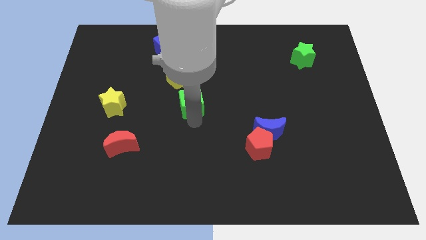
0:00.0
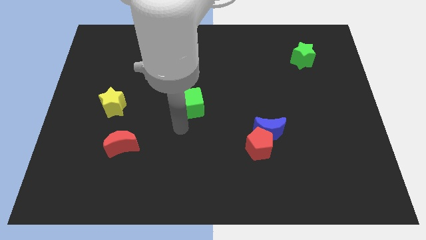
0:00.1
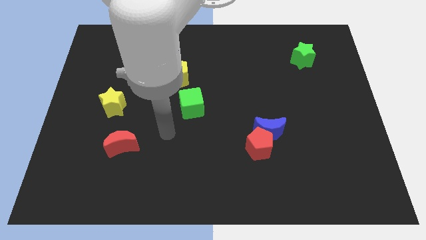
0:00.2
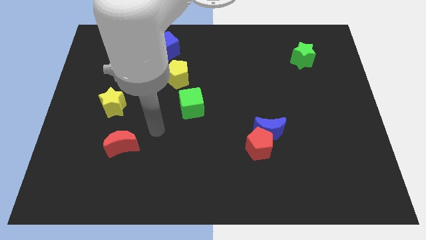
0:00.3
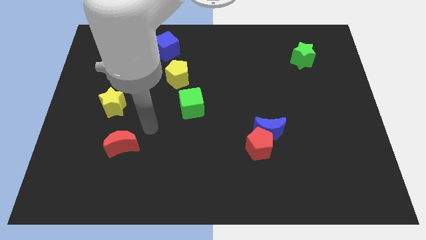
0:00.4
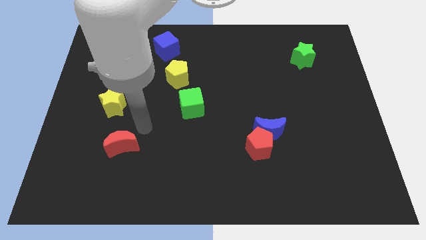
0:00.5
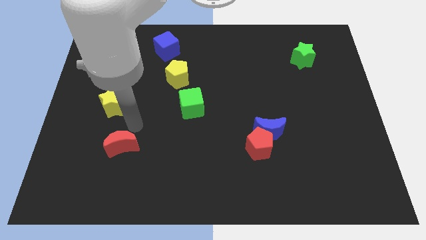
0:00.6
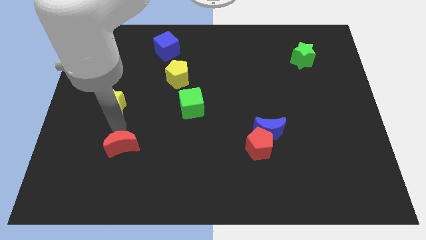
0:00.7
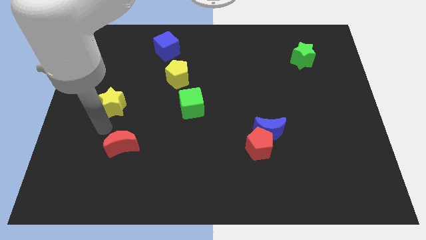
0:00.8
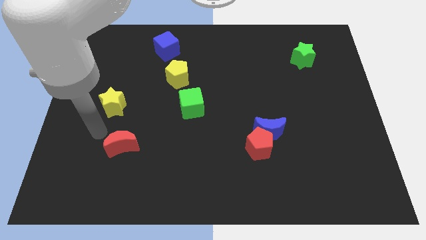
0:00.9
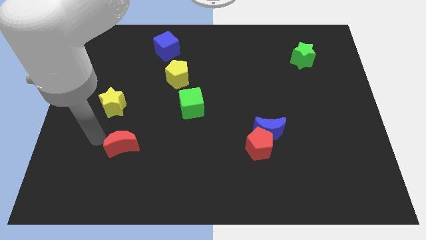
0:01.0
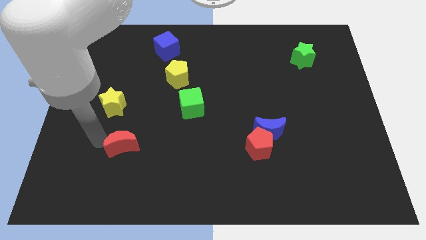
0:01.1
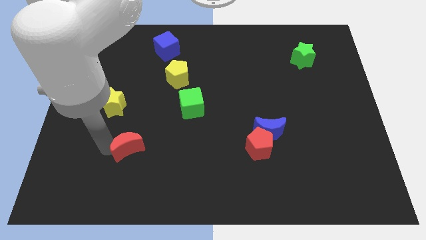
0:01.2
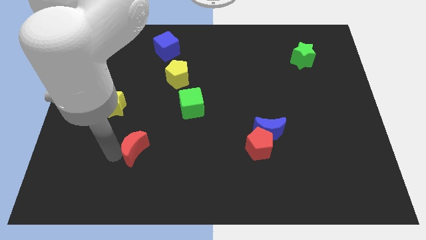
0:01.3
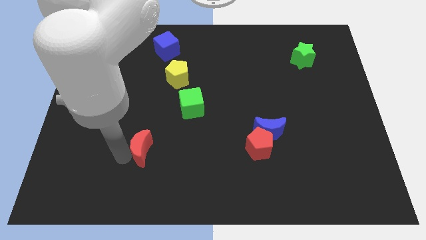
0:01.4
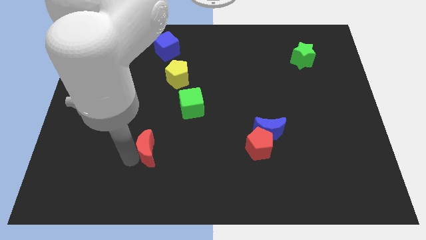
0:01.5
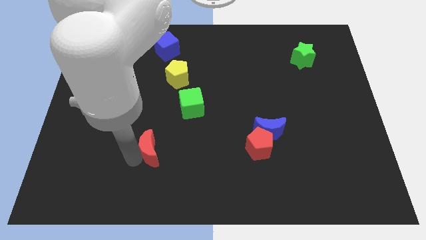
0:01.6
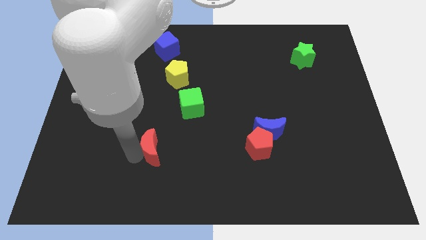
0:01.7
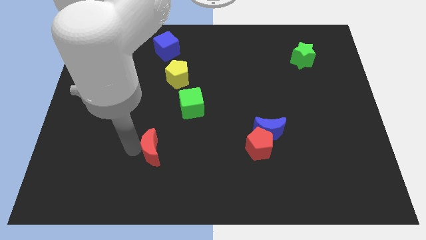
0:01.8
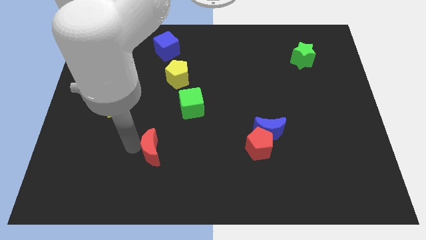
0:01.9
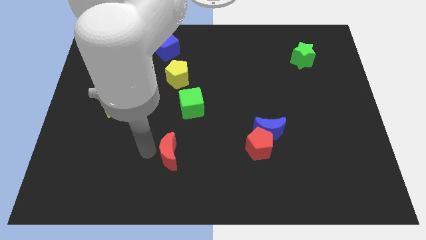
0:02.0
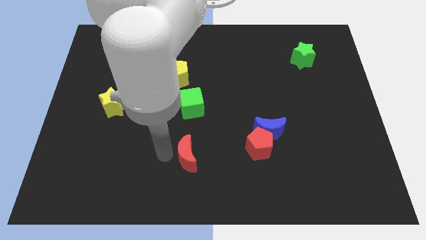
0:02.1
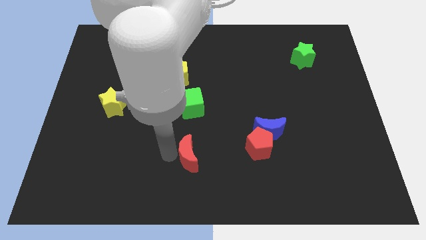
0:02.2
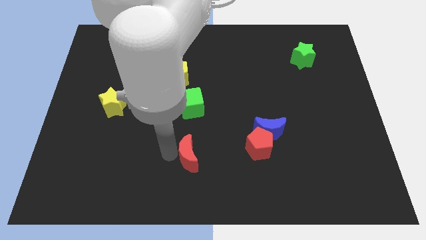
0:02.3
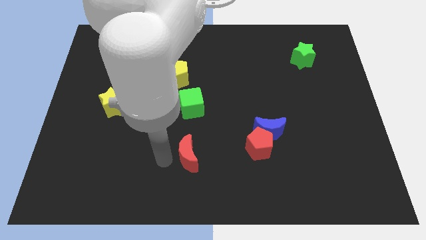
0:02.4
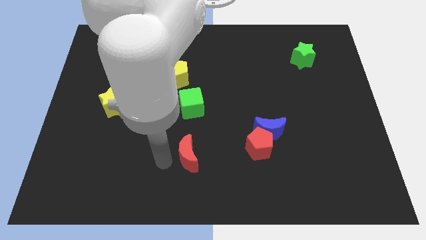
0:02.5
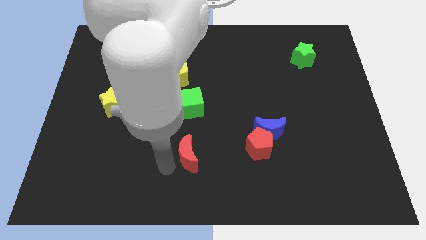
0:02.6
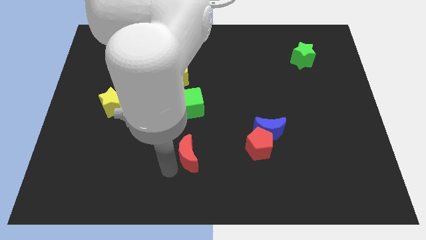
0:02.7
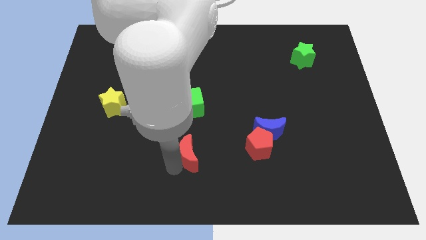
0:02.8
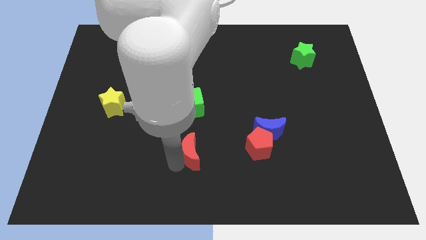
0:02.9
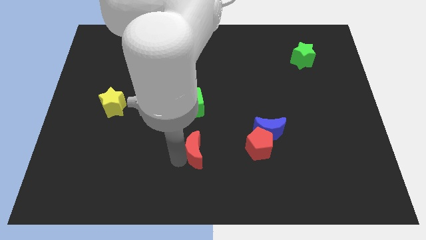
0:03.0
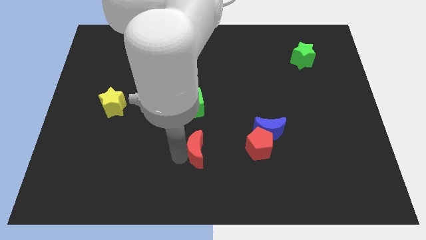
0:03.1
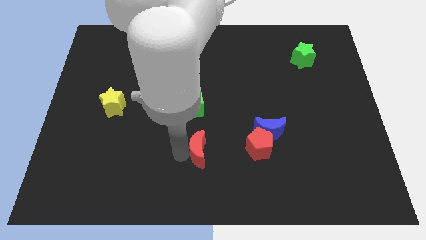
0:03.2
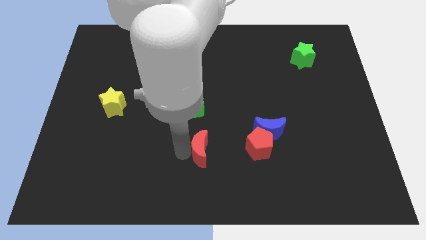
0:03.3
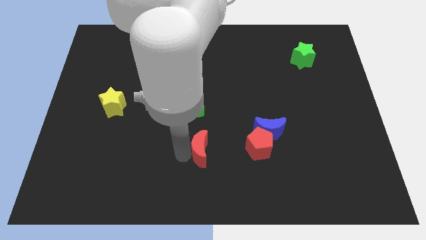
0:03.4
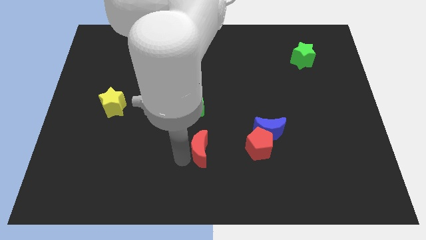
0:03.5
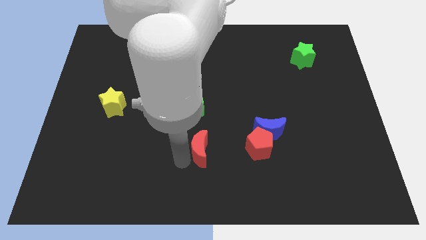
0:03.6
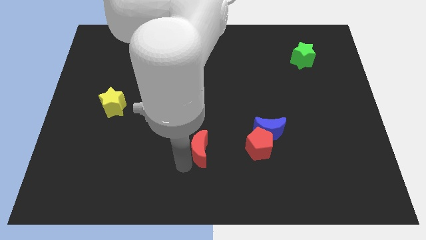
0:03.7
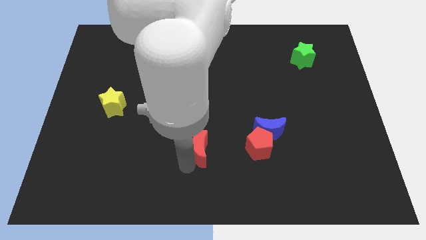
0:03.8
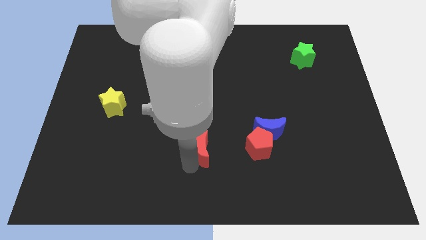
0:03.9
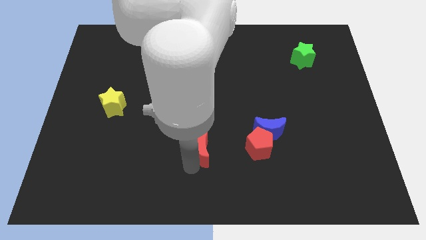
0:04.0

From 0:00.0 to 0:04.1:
place the red crescent to the left side of red pentagon

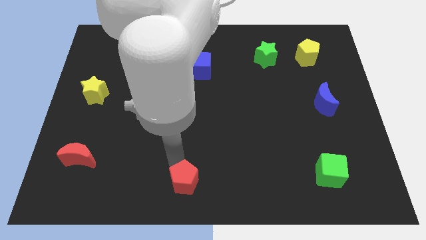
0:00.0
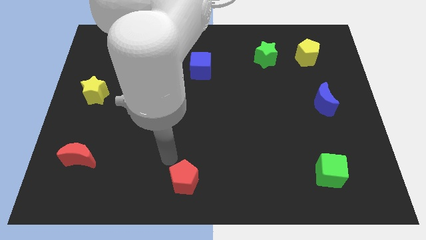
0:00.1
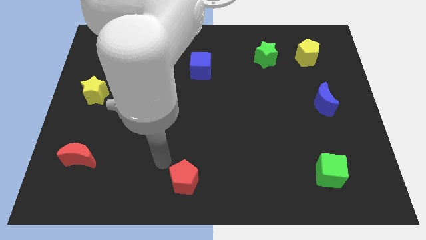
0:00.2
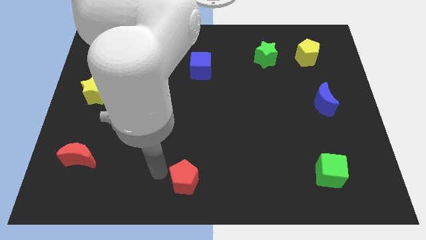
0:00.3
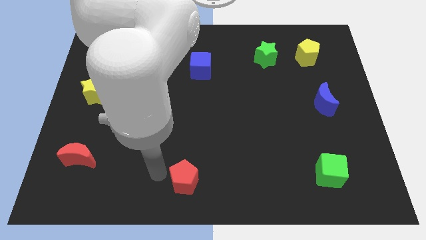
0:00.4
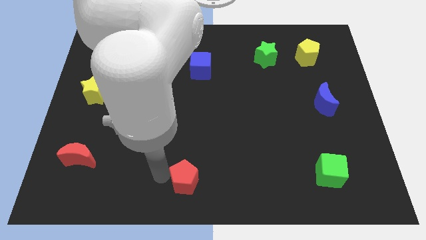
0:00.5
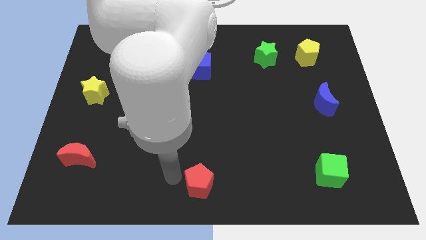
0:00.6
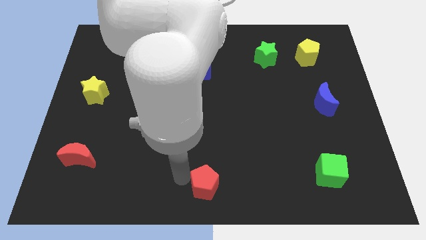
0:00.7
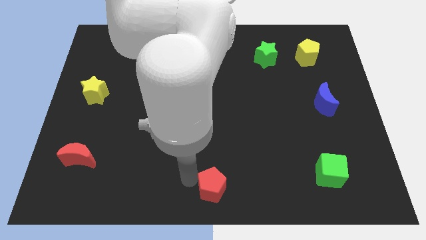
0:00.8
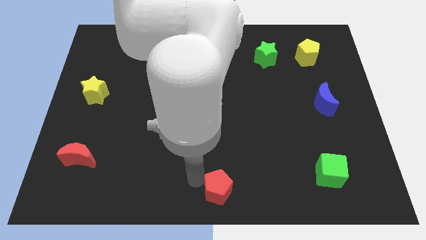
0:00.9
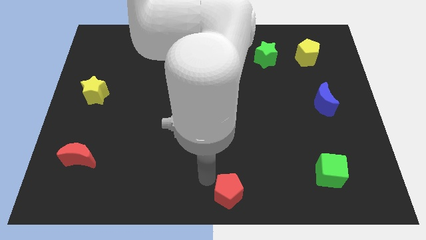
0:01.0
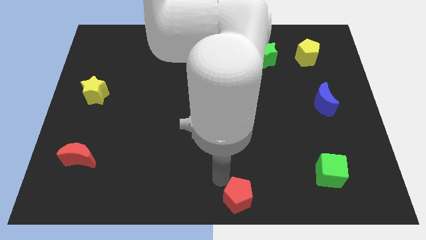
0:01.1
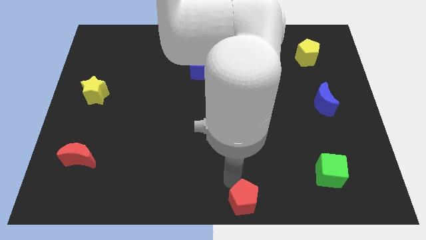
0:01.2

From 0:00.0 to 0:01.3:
place the red pentagon at the bottom center of the board

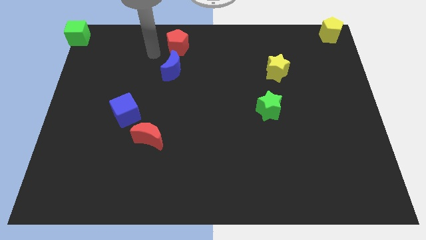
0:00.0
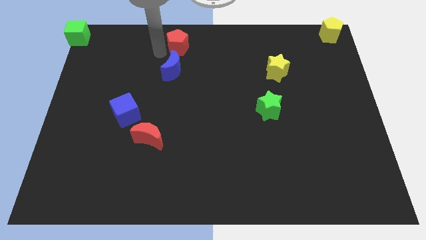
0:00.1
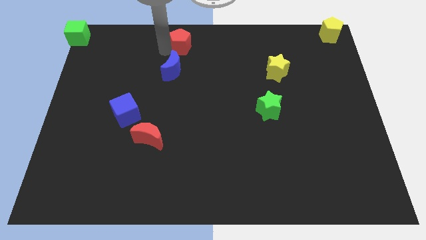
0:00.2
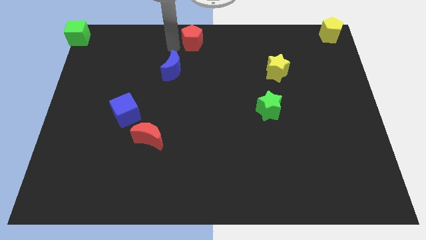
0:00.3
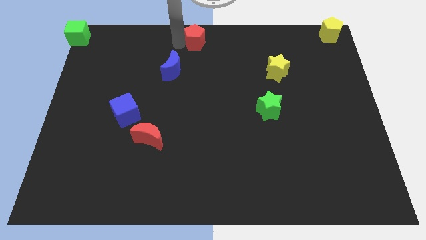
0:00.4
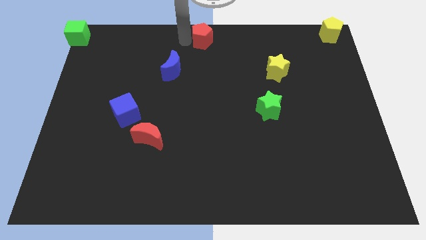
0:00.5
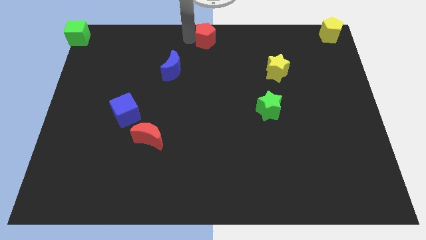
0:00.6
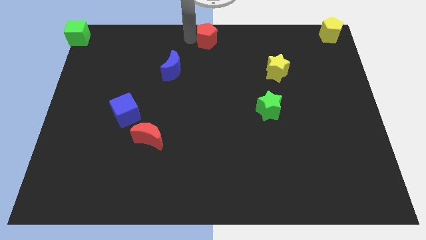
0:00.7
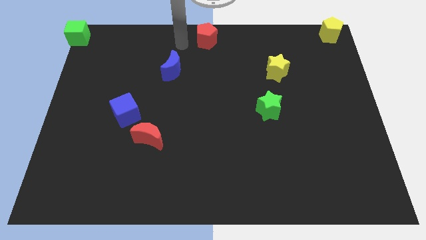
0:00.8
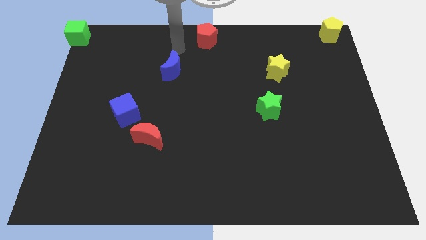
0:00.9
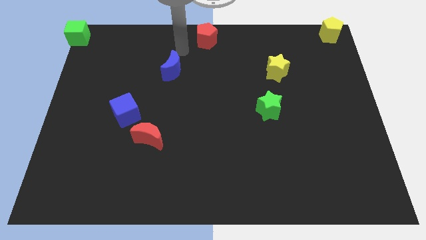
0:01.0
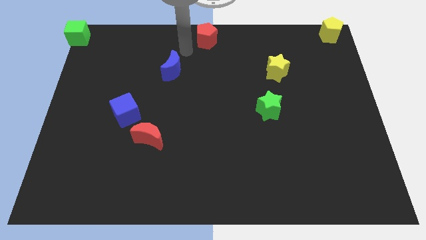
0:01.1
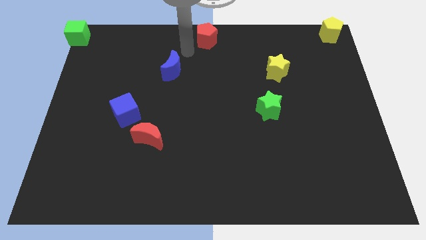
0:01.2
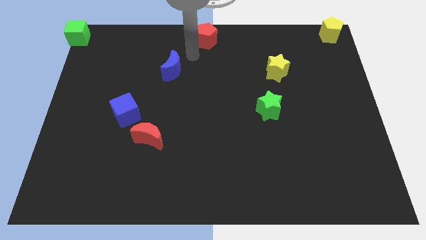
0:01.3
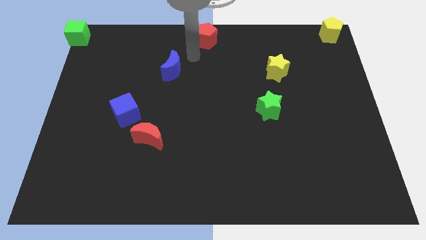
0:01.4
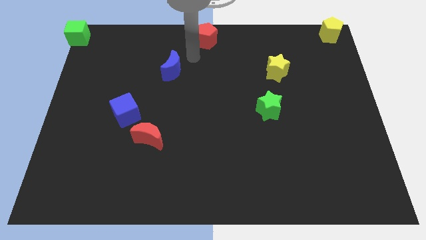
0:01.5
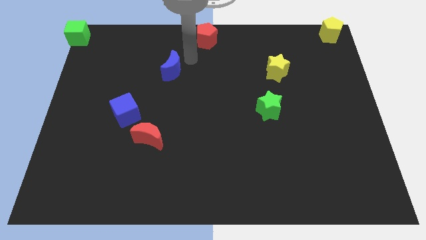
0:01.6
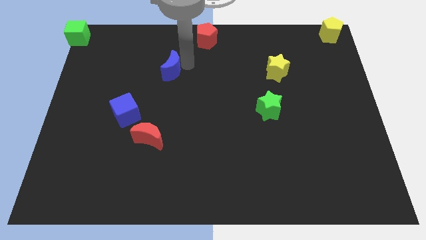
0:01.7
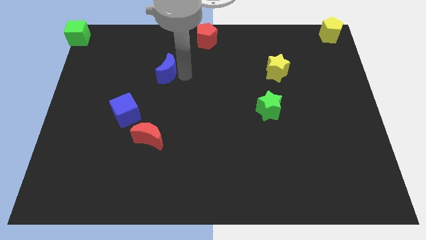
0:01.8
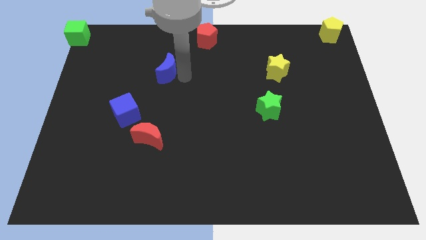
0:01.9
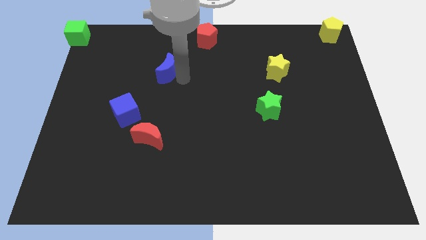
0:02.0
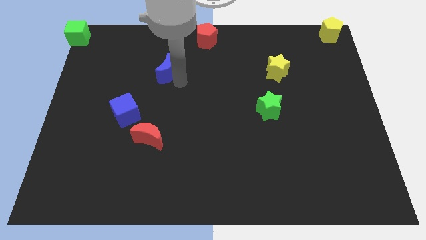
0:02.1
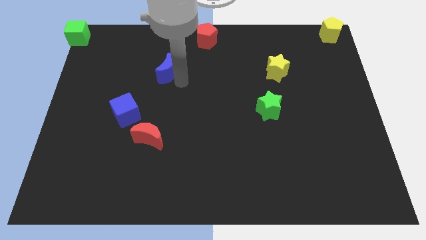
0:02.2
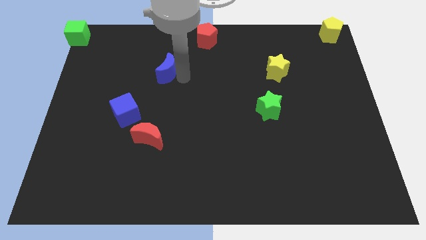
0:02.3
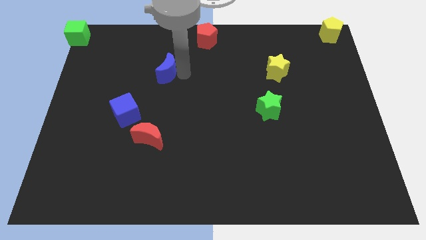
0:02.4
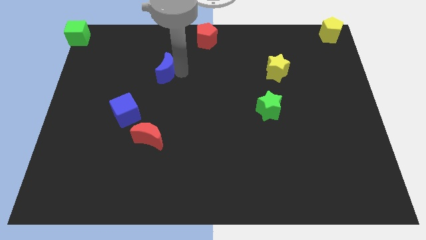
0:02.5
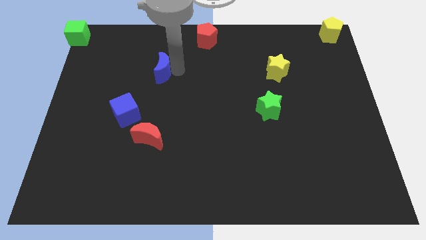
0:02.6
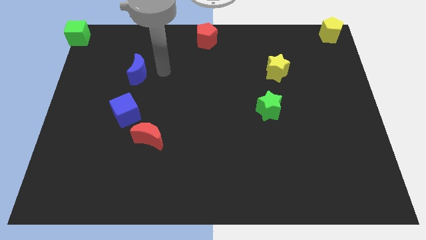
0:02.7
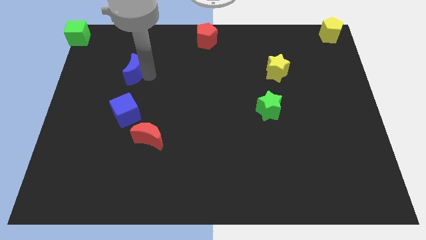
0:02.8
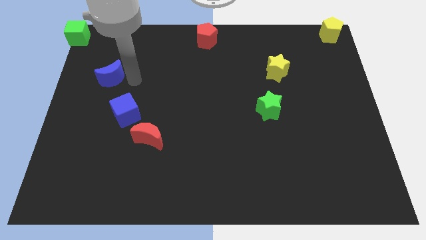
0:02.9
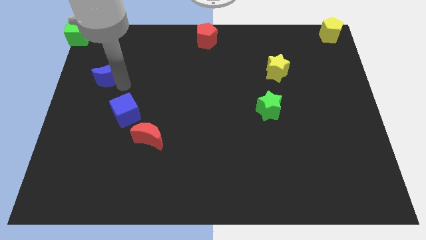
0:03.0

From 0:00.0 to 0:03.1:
push blue crescent above blue cube

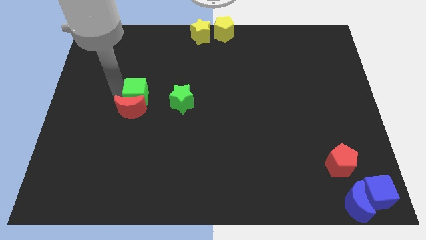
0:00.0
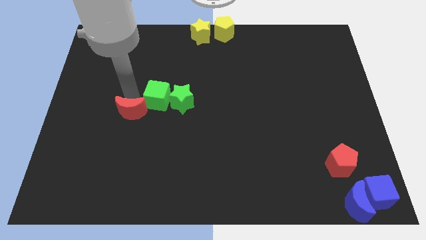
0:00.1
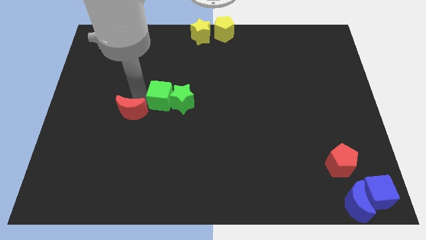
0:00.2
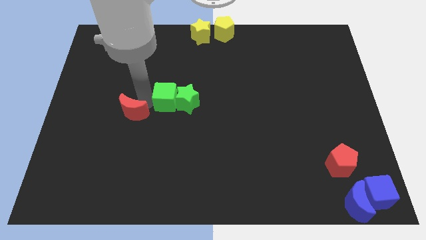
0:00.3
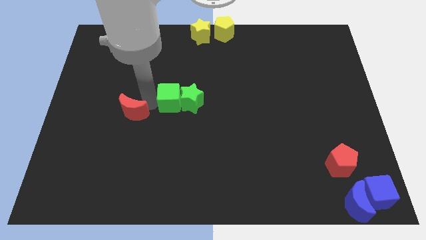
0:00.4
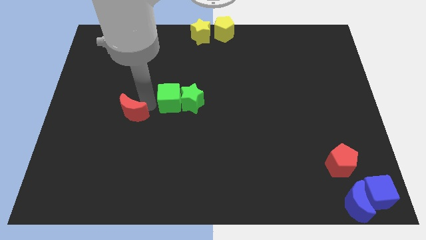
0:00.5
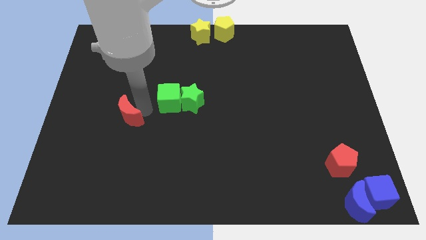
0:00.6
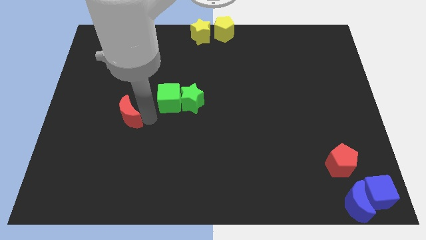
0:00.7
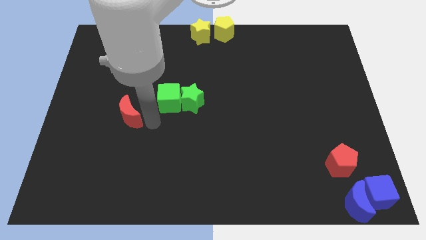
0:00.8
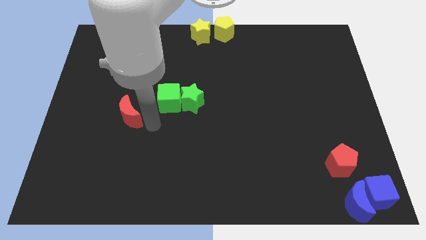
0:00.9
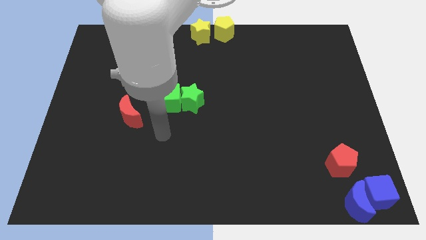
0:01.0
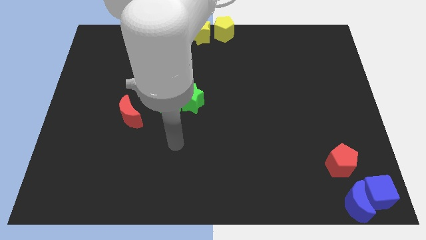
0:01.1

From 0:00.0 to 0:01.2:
place the arm below the green cube
